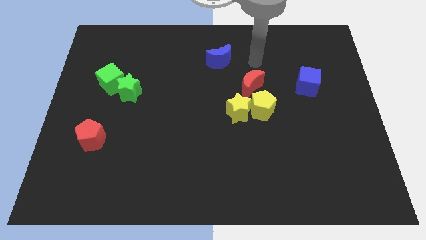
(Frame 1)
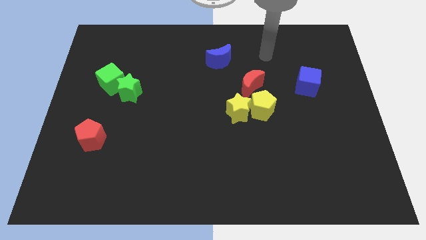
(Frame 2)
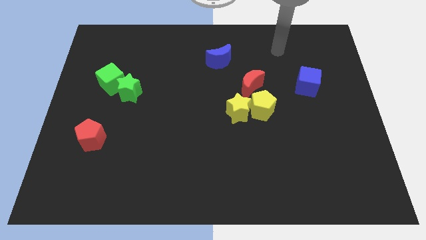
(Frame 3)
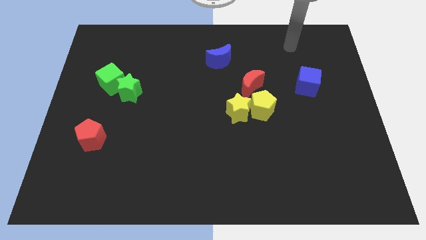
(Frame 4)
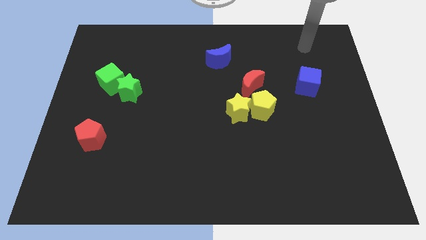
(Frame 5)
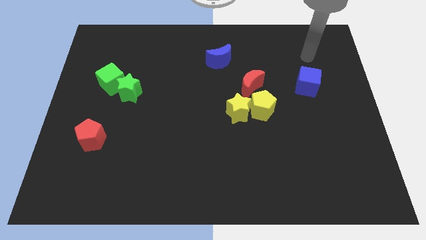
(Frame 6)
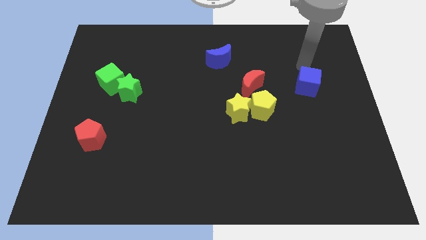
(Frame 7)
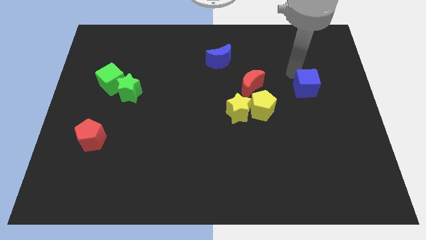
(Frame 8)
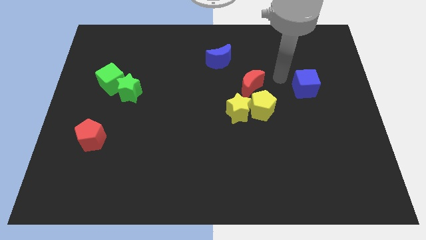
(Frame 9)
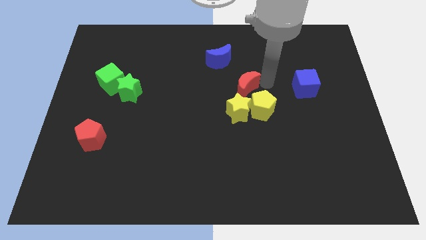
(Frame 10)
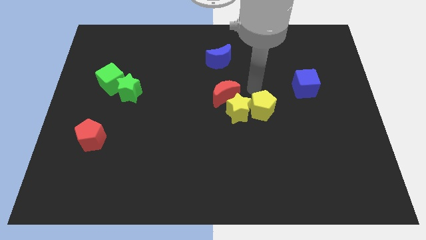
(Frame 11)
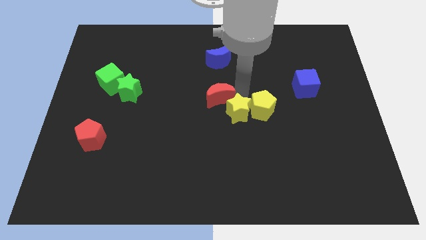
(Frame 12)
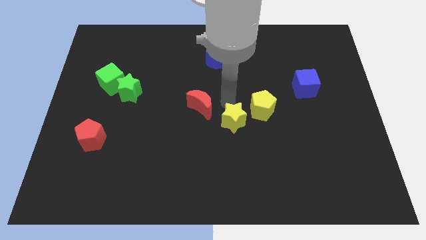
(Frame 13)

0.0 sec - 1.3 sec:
place the red moon and the yellow star diagonal to each other

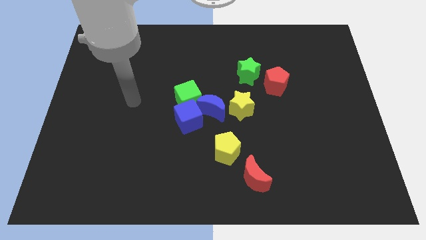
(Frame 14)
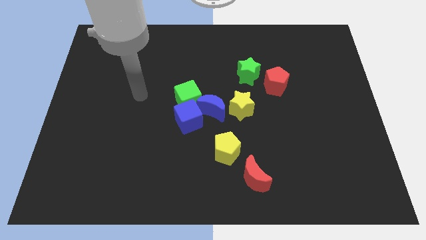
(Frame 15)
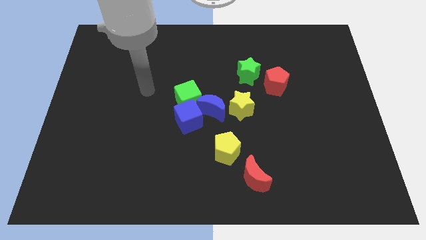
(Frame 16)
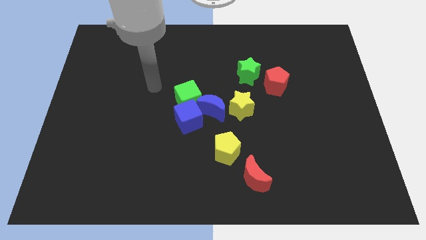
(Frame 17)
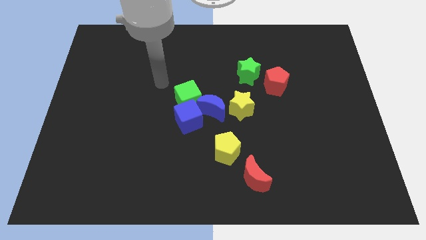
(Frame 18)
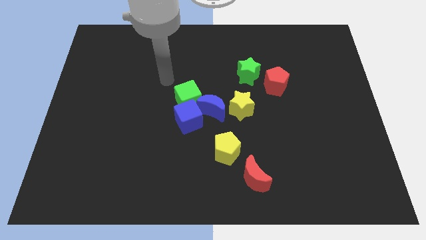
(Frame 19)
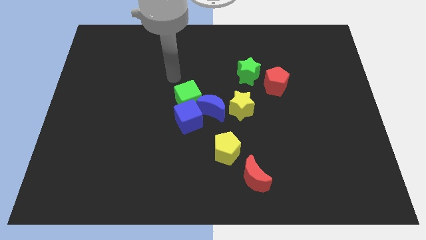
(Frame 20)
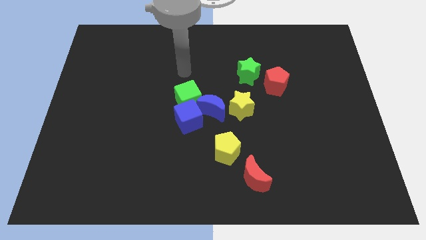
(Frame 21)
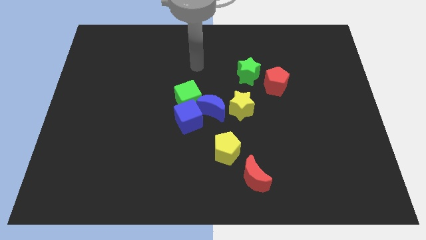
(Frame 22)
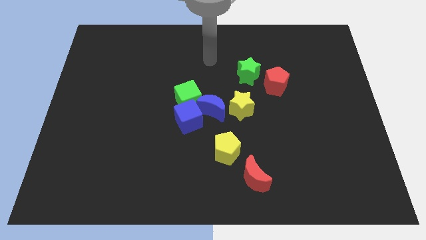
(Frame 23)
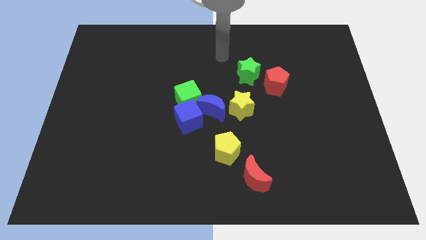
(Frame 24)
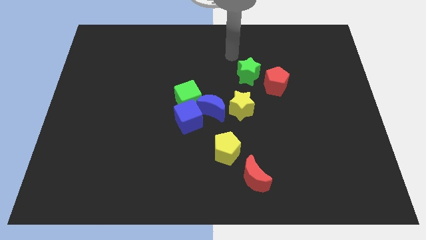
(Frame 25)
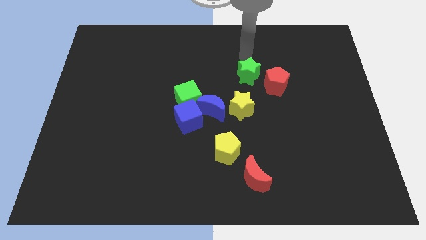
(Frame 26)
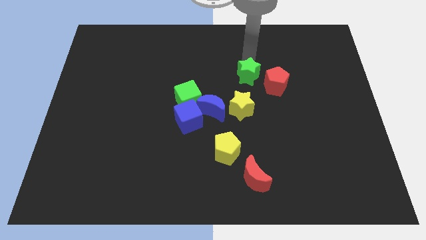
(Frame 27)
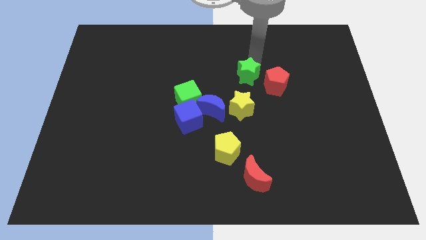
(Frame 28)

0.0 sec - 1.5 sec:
move your arm above the green star

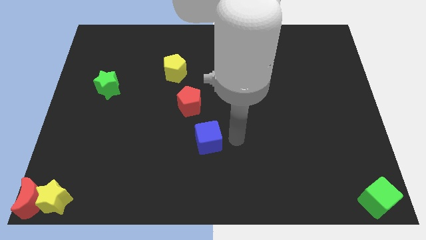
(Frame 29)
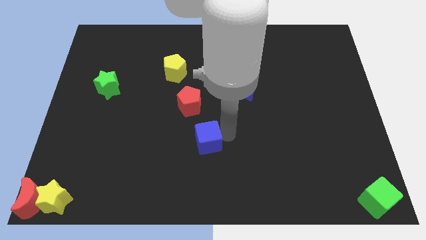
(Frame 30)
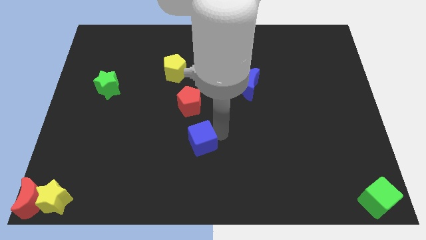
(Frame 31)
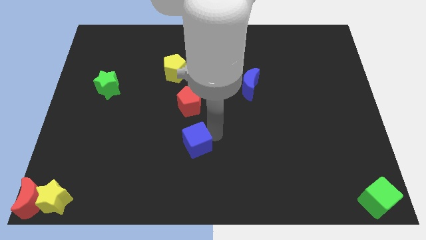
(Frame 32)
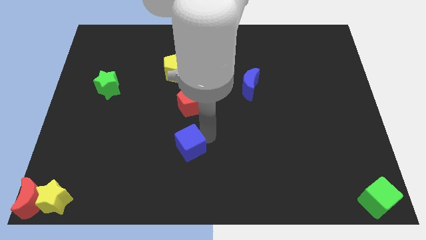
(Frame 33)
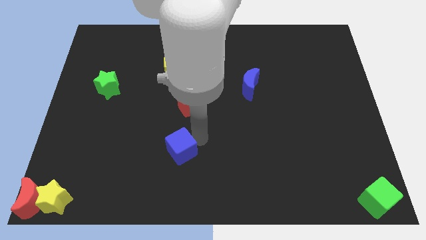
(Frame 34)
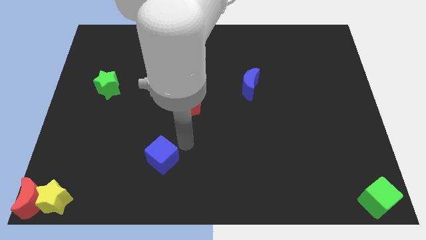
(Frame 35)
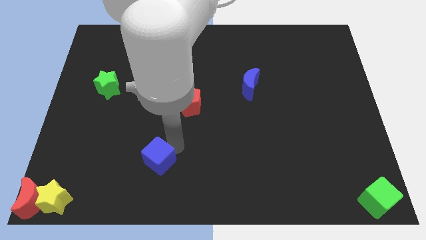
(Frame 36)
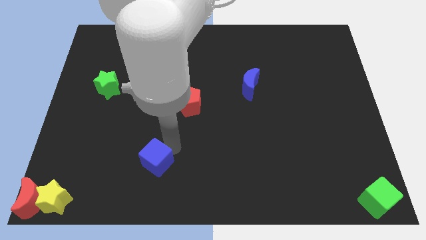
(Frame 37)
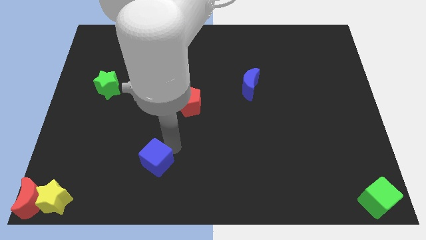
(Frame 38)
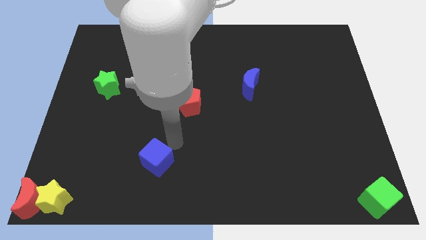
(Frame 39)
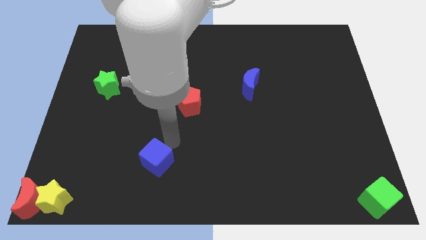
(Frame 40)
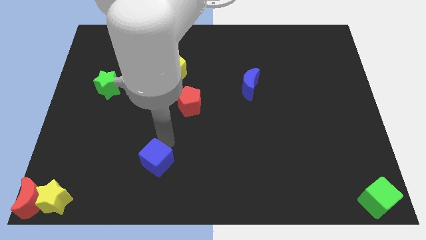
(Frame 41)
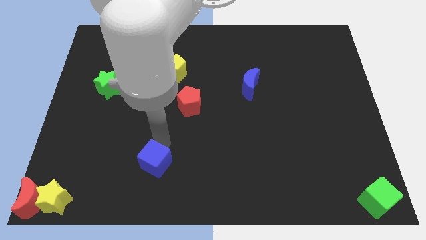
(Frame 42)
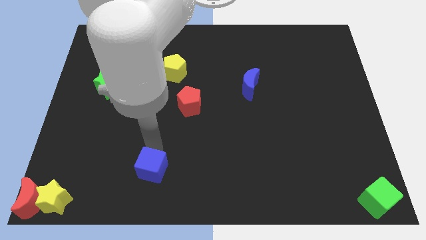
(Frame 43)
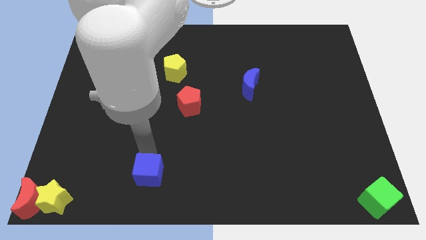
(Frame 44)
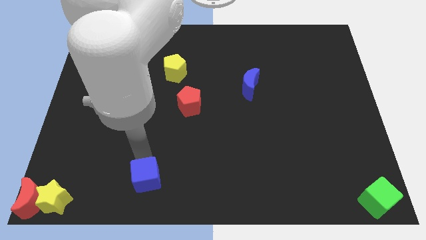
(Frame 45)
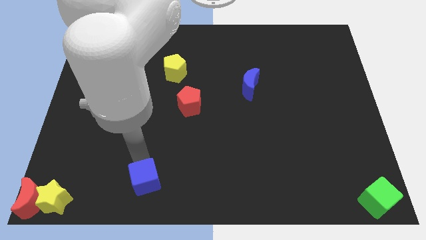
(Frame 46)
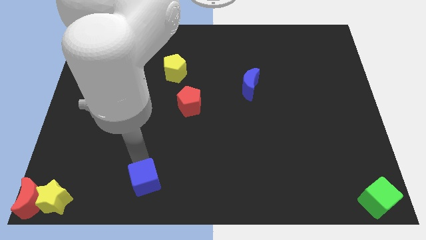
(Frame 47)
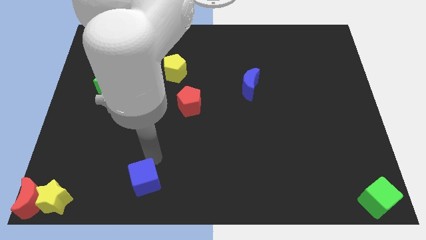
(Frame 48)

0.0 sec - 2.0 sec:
move the blue cube towards the bottom center of the board

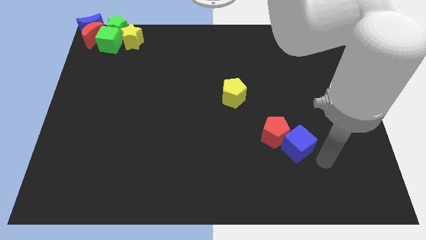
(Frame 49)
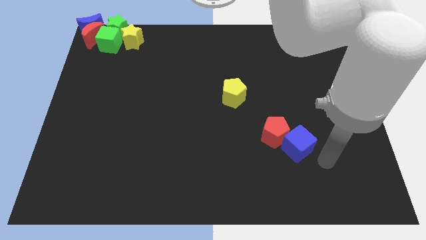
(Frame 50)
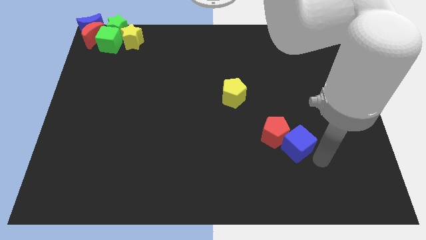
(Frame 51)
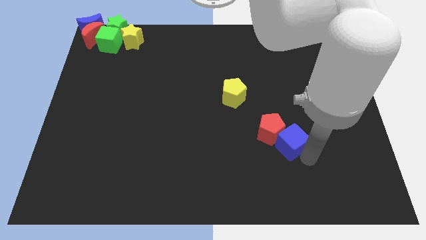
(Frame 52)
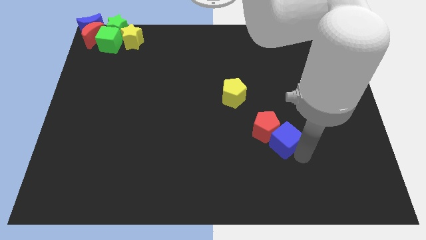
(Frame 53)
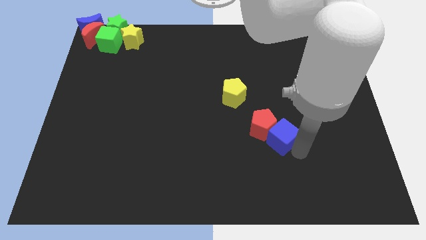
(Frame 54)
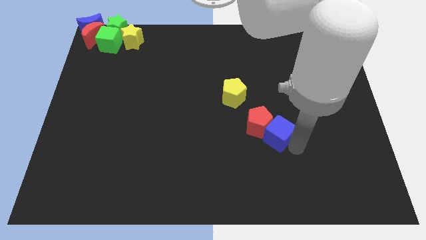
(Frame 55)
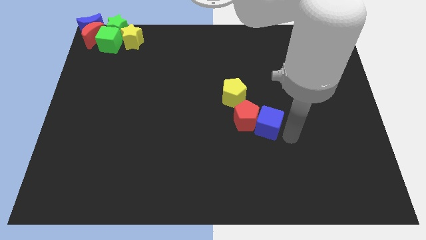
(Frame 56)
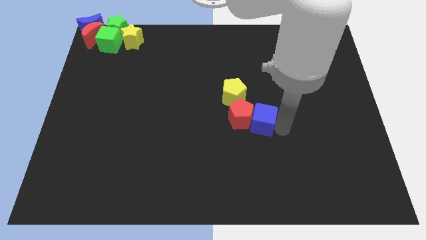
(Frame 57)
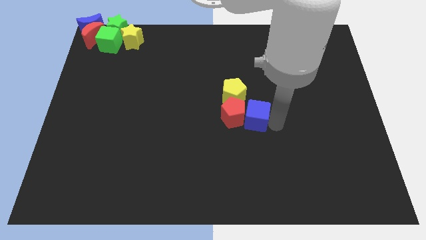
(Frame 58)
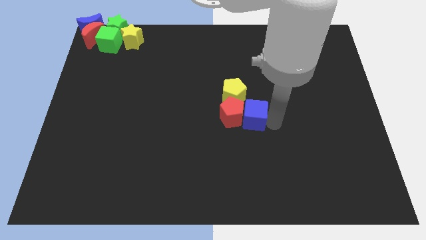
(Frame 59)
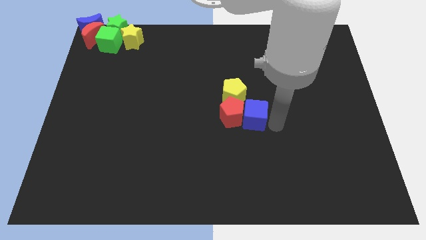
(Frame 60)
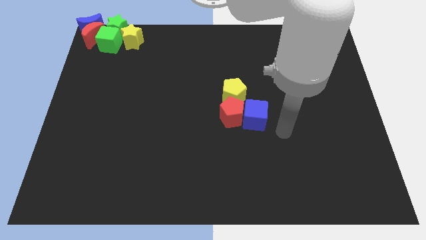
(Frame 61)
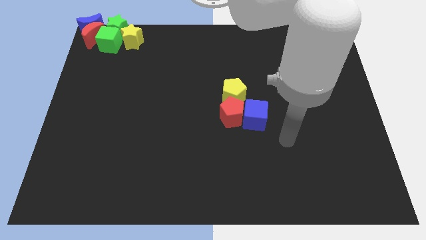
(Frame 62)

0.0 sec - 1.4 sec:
push the red pentagon with the blue cube towards the center of the board

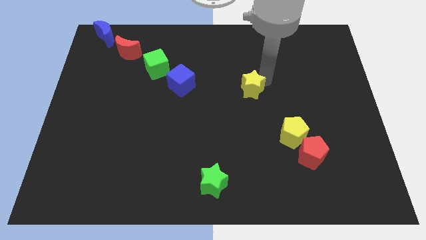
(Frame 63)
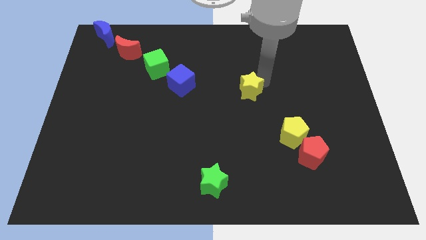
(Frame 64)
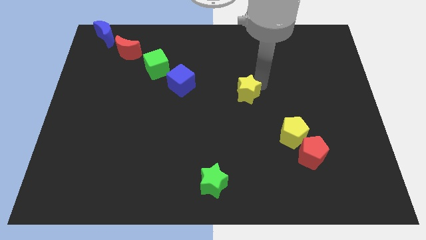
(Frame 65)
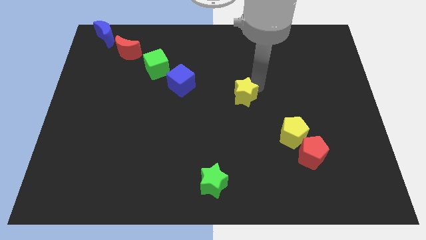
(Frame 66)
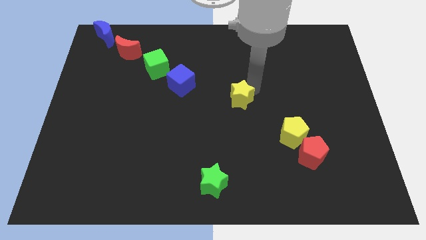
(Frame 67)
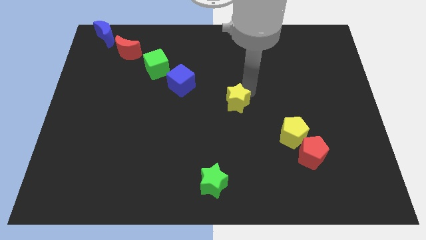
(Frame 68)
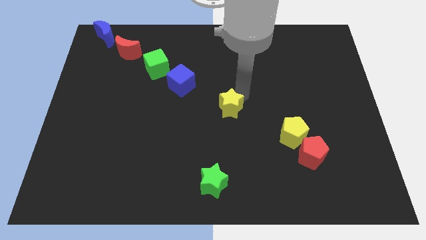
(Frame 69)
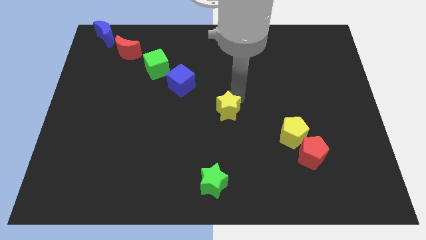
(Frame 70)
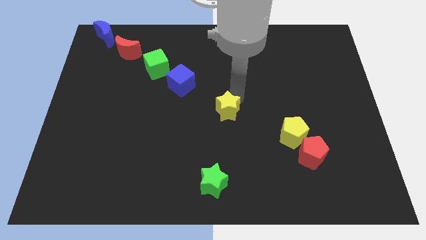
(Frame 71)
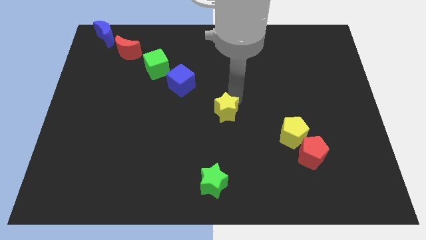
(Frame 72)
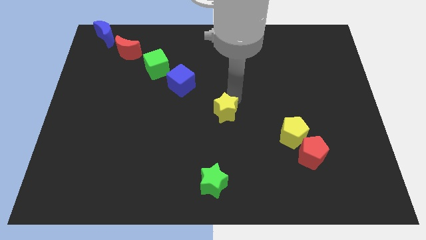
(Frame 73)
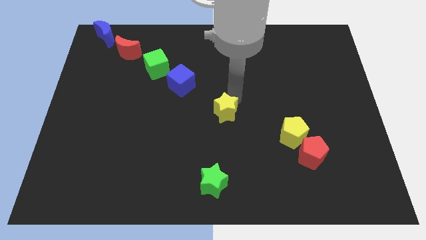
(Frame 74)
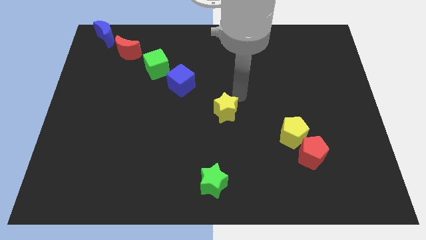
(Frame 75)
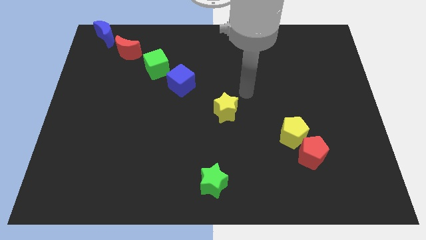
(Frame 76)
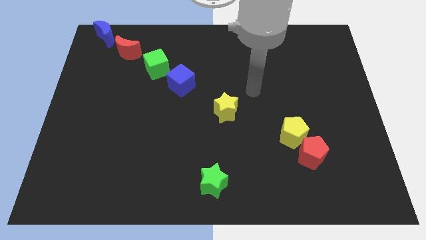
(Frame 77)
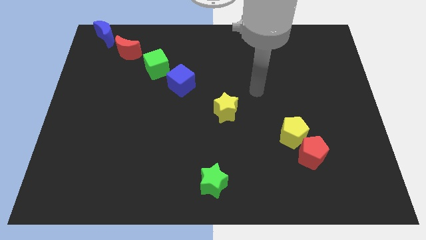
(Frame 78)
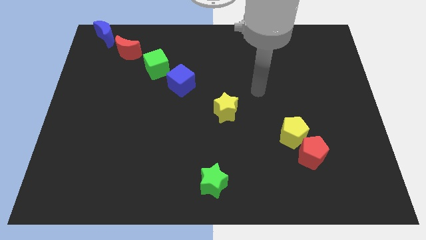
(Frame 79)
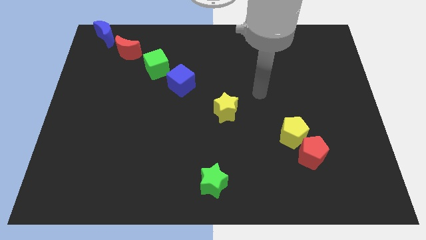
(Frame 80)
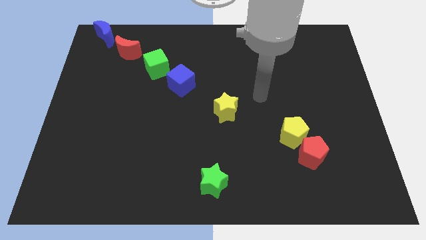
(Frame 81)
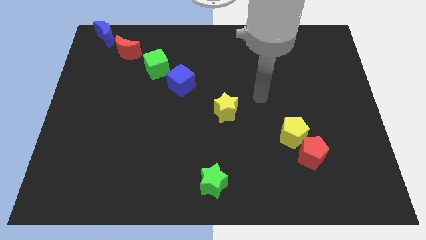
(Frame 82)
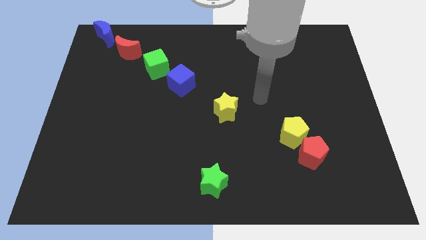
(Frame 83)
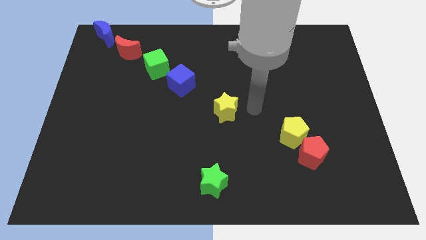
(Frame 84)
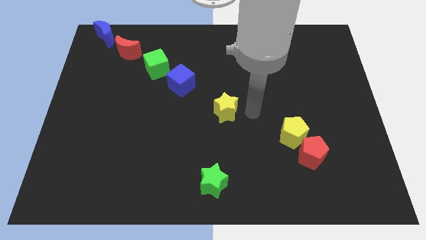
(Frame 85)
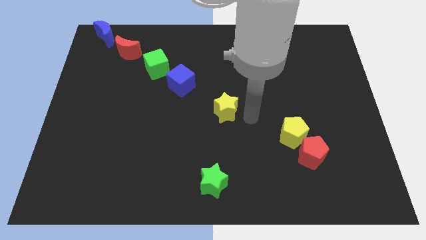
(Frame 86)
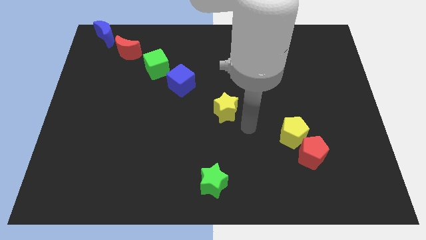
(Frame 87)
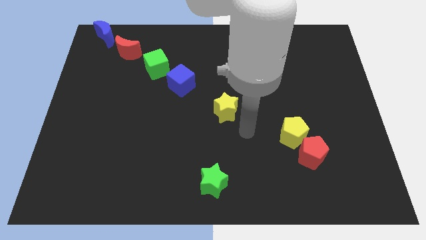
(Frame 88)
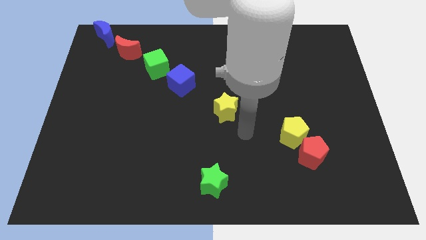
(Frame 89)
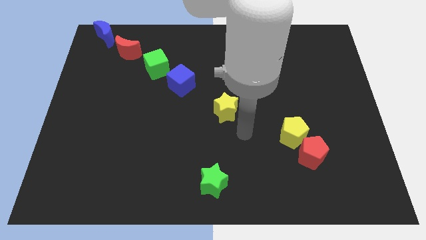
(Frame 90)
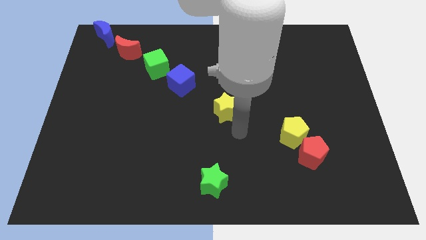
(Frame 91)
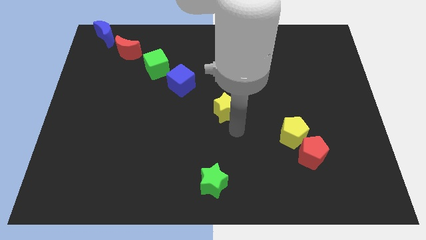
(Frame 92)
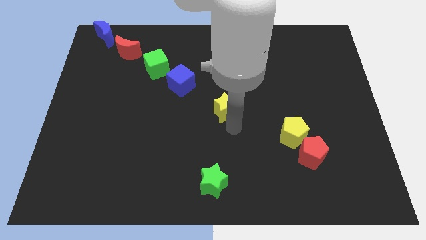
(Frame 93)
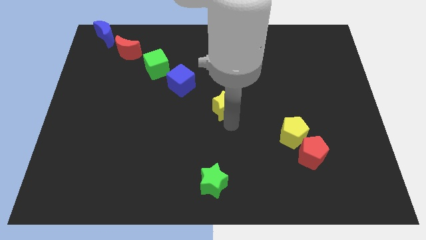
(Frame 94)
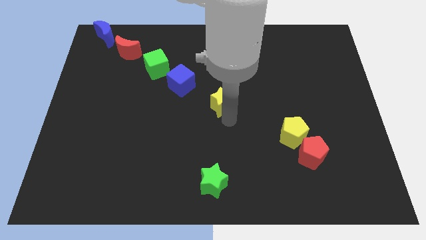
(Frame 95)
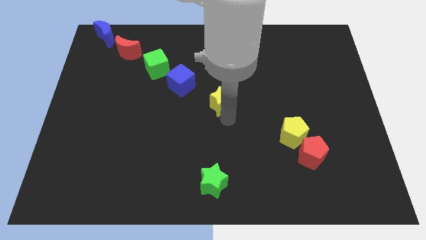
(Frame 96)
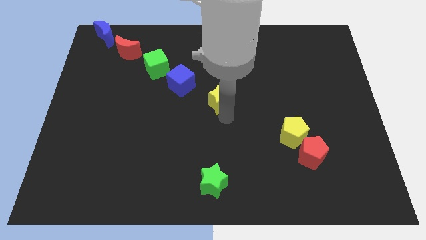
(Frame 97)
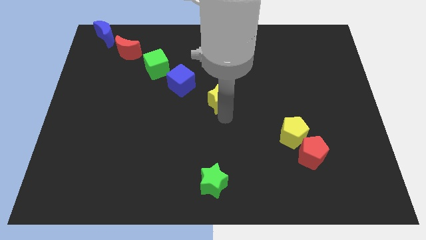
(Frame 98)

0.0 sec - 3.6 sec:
place yellow star vertically above green star
